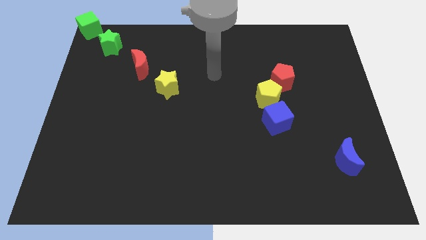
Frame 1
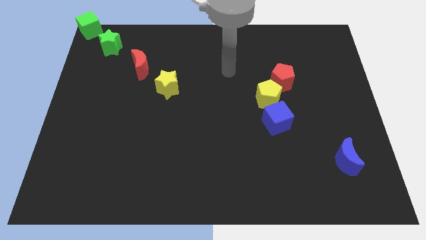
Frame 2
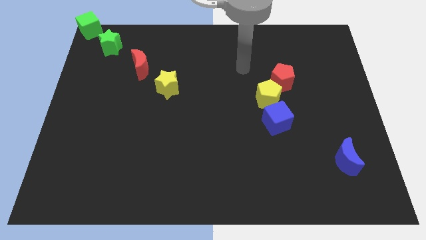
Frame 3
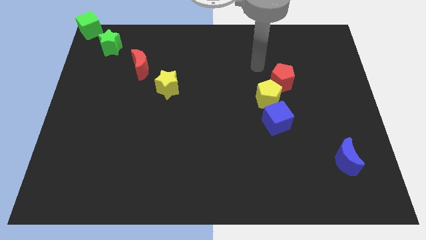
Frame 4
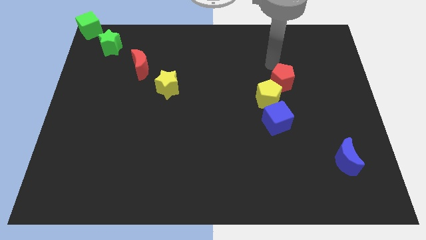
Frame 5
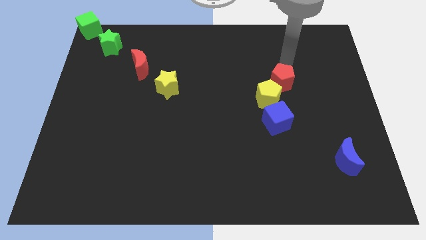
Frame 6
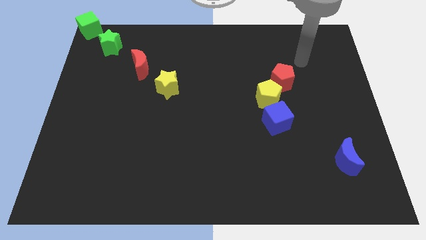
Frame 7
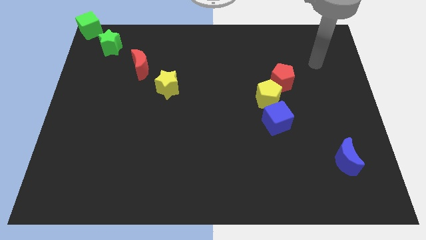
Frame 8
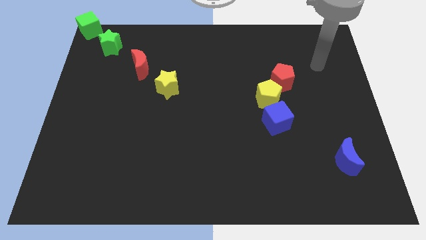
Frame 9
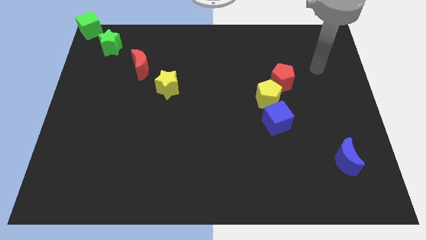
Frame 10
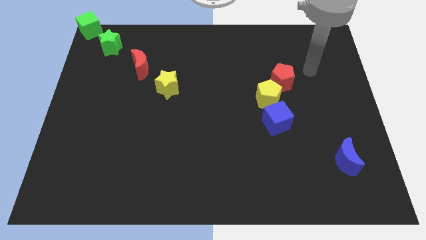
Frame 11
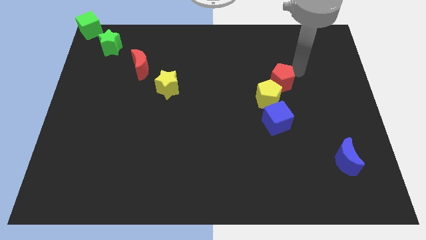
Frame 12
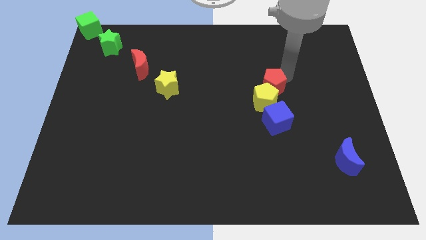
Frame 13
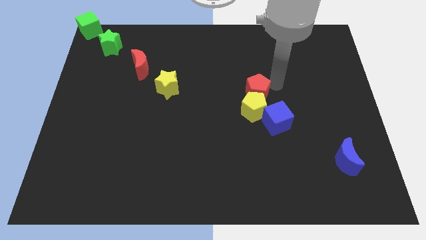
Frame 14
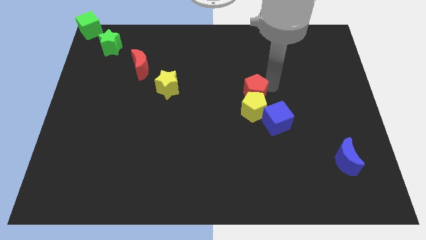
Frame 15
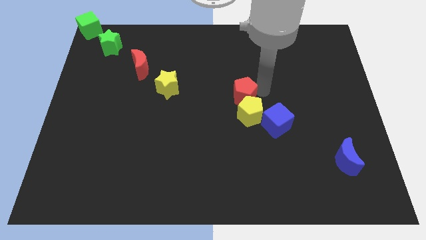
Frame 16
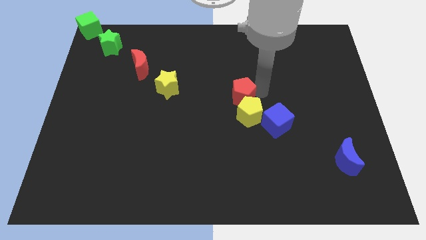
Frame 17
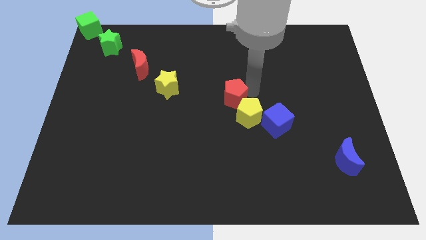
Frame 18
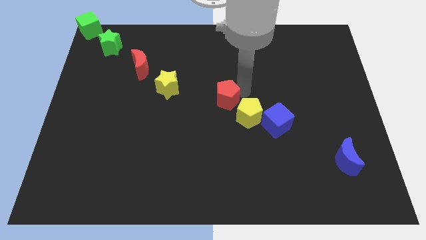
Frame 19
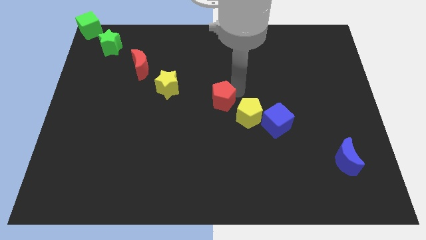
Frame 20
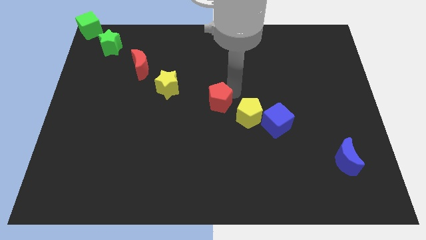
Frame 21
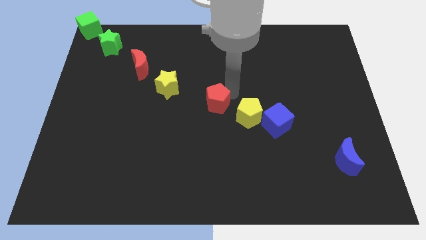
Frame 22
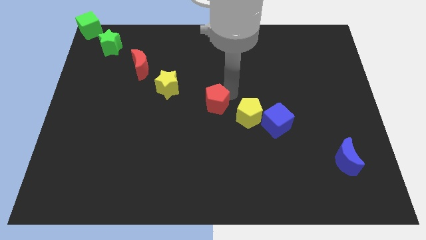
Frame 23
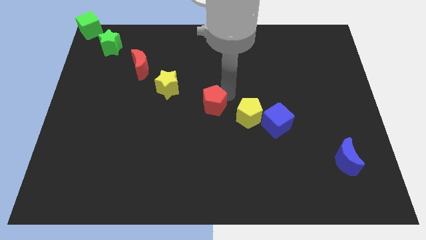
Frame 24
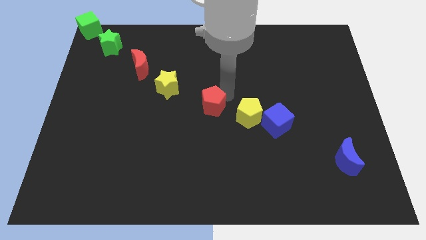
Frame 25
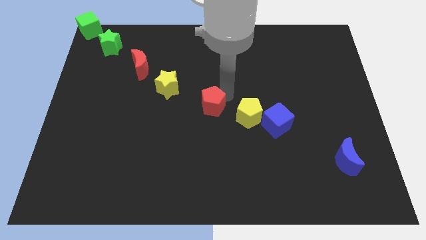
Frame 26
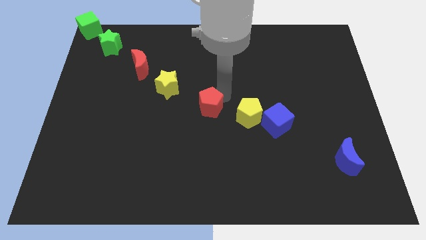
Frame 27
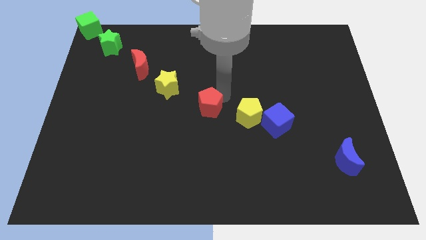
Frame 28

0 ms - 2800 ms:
push the red pentagon to the center of the board

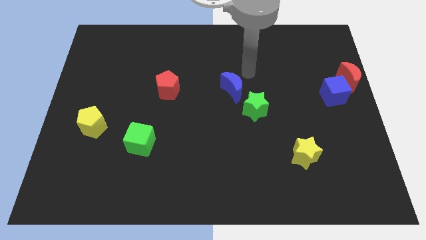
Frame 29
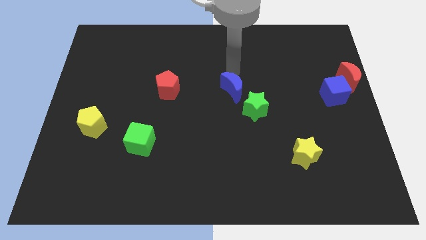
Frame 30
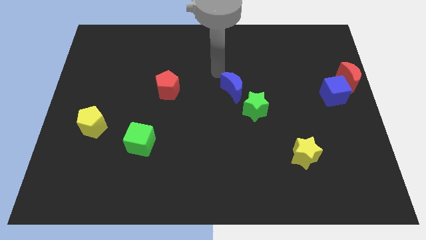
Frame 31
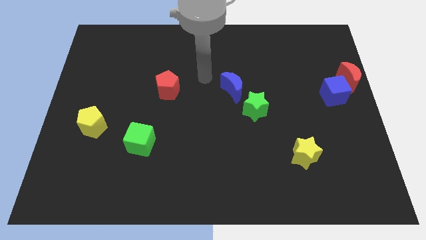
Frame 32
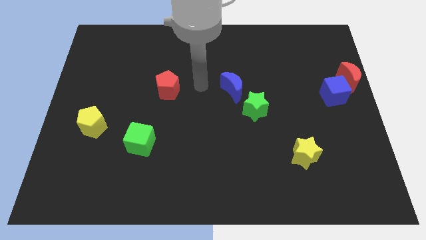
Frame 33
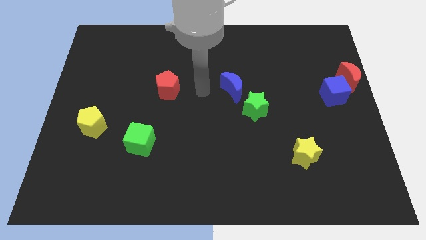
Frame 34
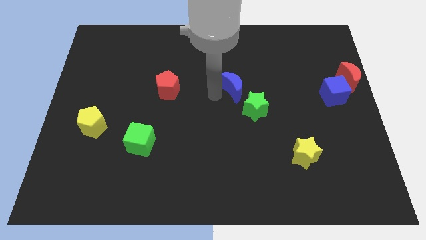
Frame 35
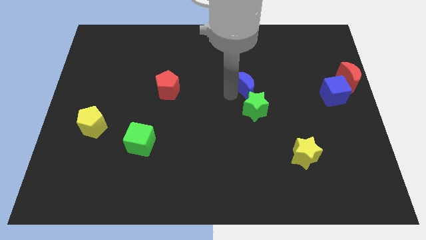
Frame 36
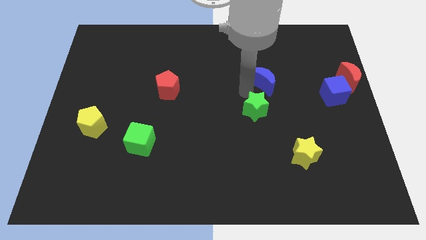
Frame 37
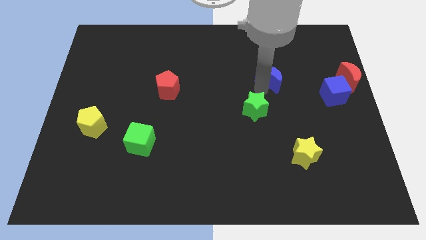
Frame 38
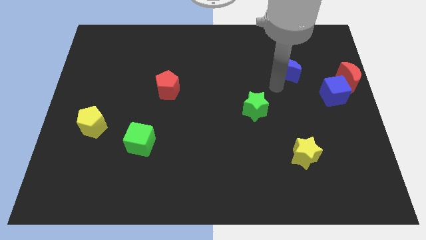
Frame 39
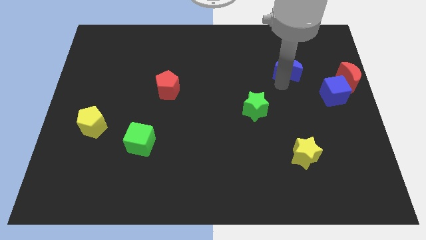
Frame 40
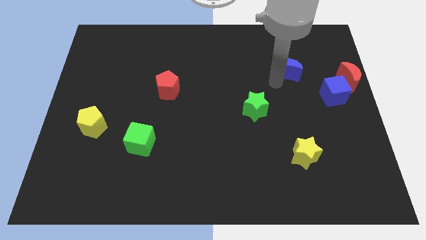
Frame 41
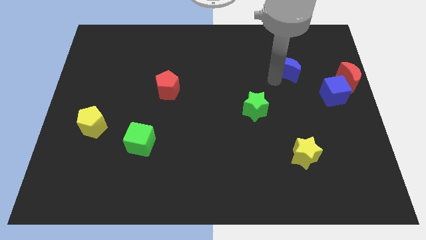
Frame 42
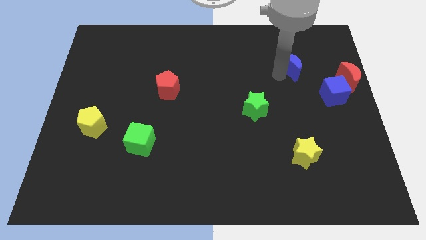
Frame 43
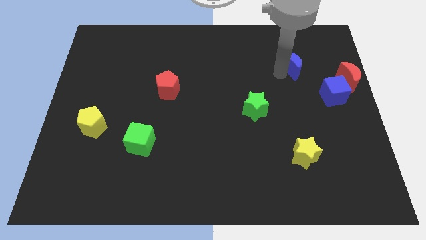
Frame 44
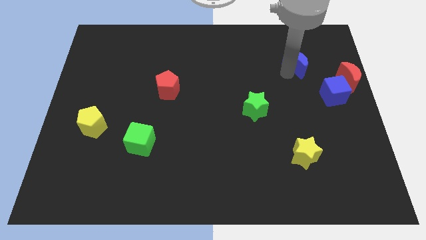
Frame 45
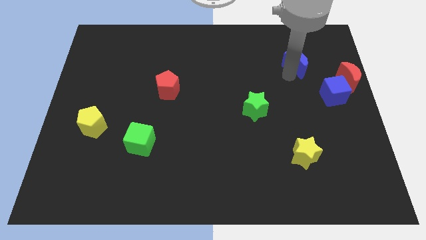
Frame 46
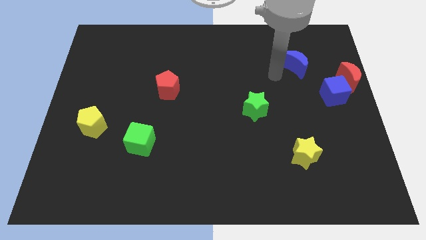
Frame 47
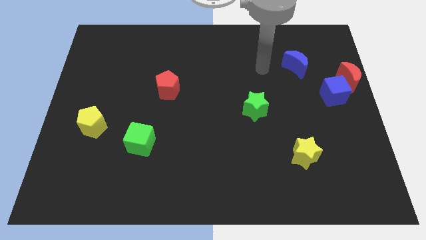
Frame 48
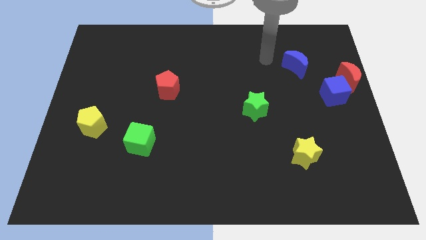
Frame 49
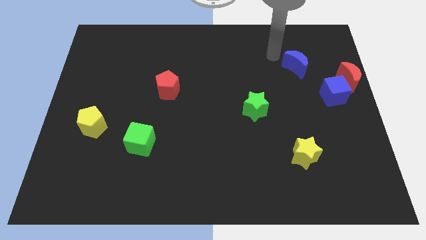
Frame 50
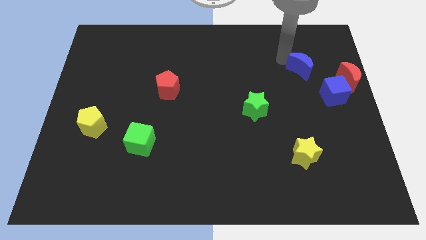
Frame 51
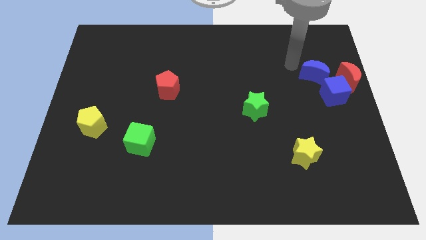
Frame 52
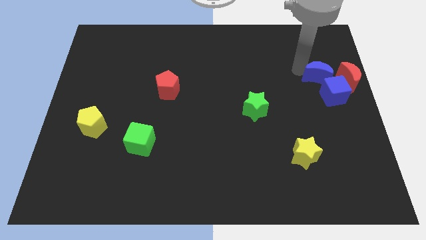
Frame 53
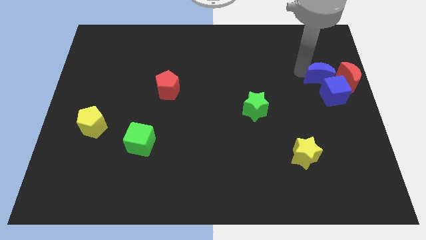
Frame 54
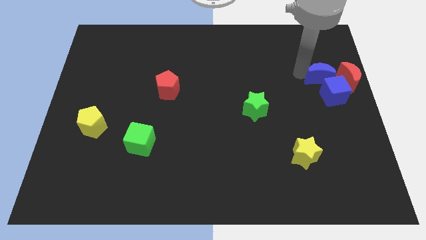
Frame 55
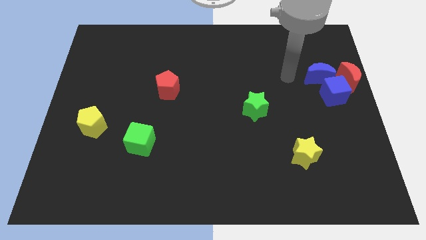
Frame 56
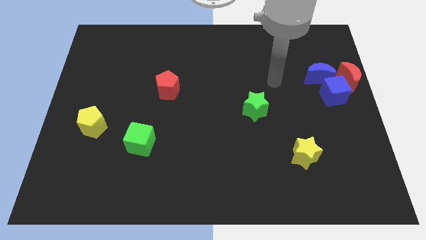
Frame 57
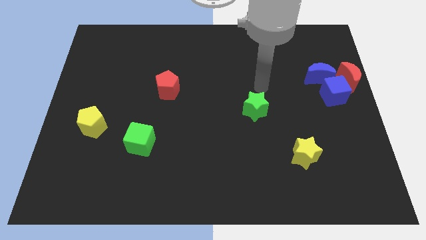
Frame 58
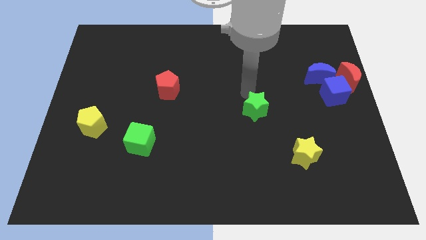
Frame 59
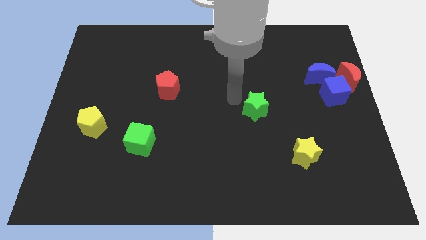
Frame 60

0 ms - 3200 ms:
drag the blue moon to center right

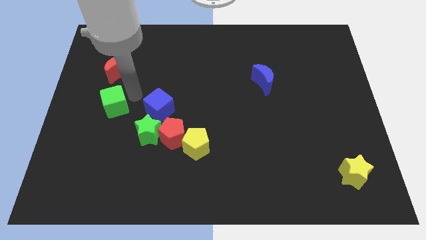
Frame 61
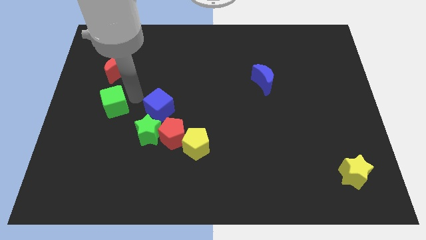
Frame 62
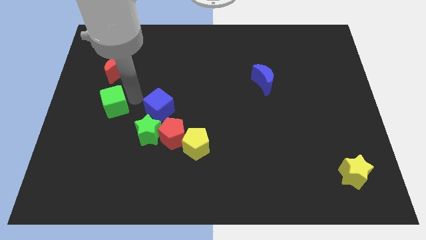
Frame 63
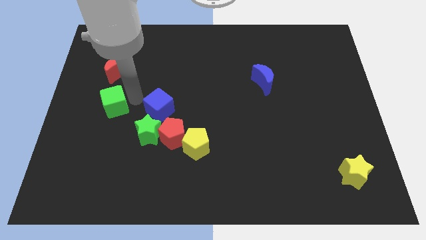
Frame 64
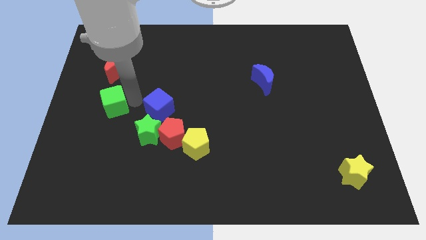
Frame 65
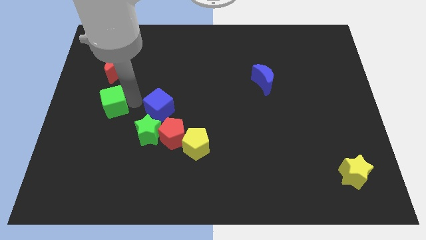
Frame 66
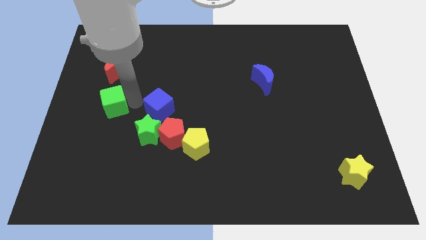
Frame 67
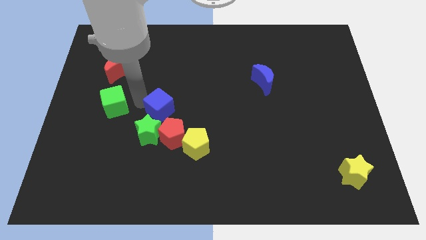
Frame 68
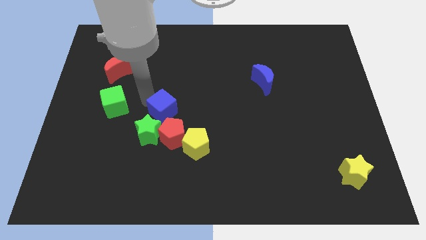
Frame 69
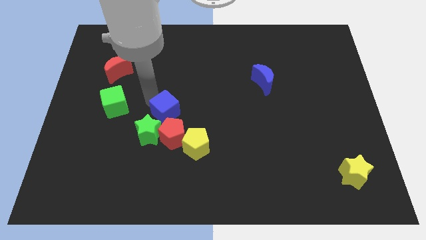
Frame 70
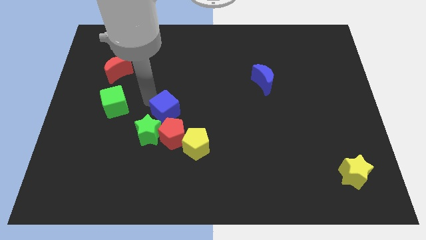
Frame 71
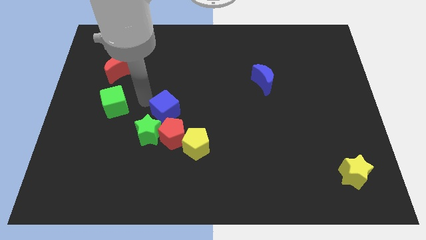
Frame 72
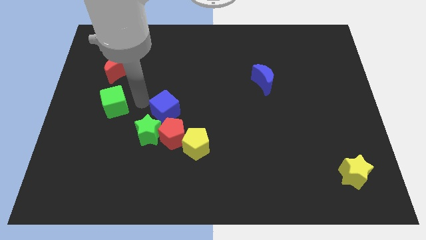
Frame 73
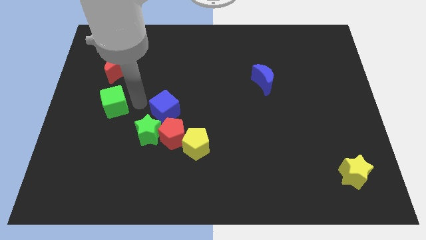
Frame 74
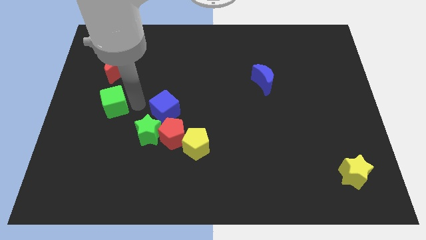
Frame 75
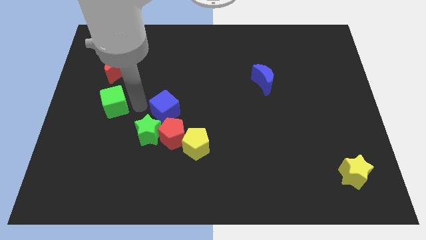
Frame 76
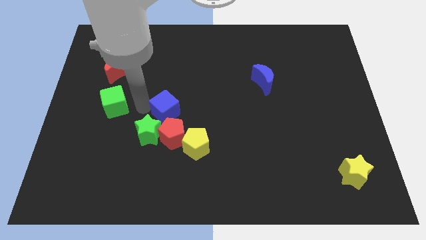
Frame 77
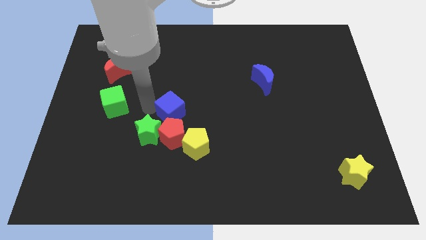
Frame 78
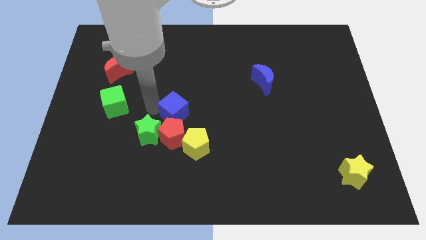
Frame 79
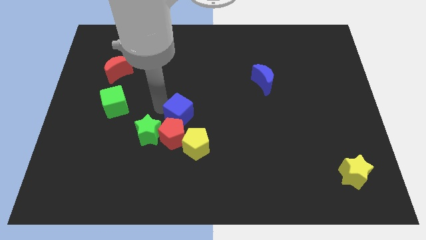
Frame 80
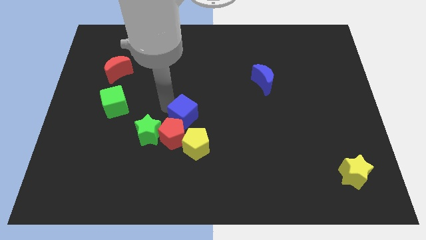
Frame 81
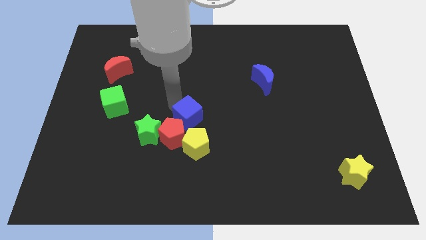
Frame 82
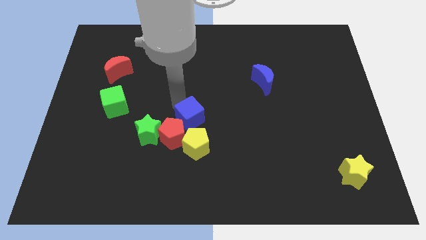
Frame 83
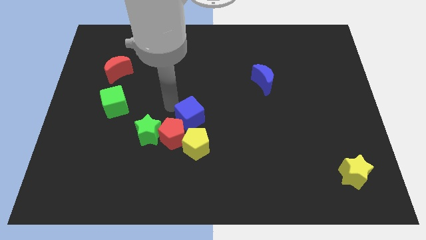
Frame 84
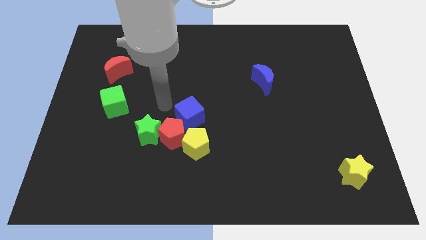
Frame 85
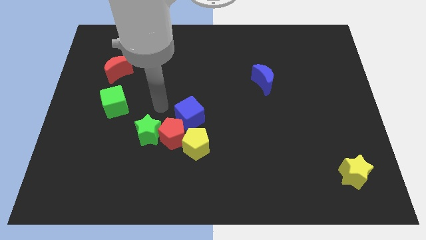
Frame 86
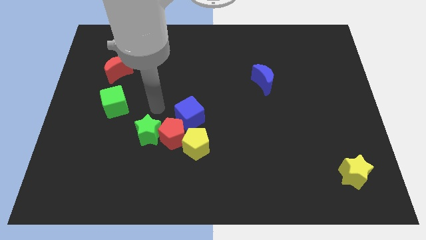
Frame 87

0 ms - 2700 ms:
separate the blue cube away from the green star

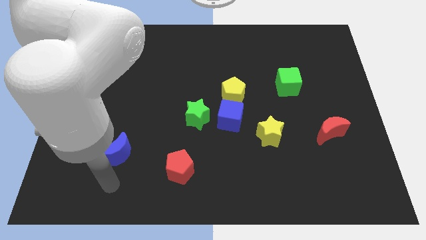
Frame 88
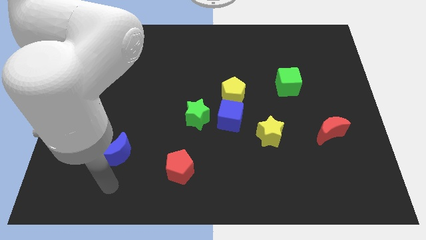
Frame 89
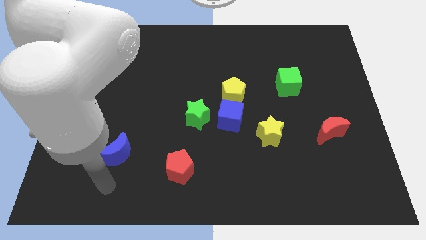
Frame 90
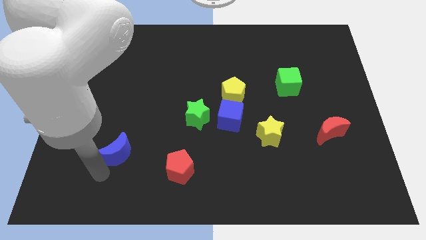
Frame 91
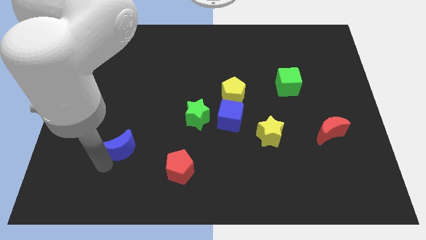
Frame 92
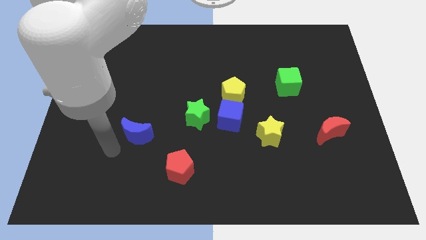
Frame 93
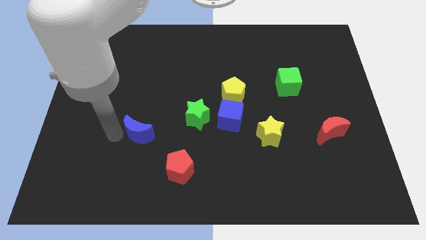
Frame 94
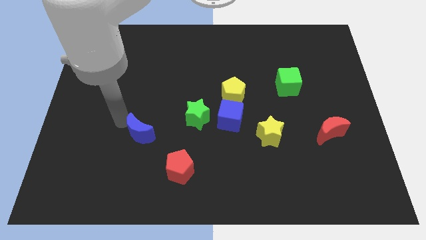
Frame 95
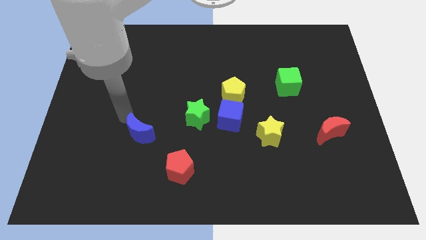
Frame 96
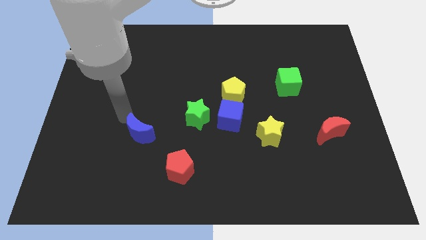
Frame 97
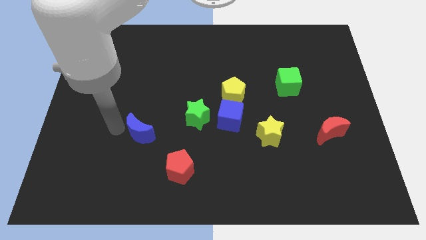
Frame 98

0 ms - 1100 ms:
move the blue moon at the top left side of the red pentagon
